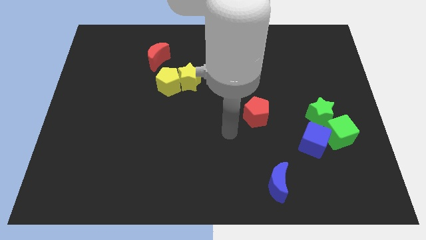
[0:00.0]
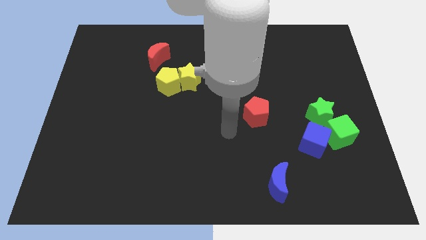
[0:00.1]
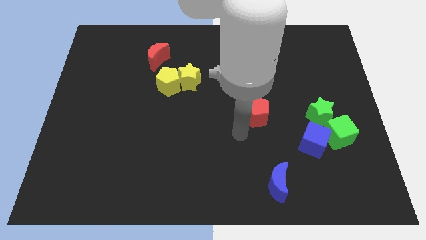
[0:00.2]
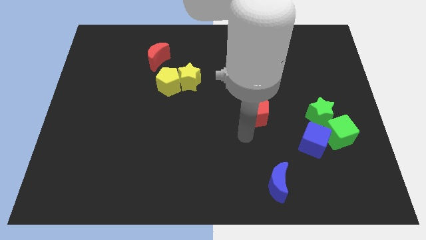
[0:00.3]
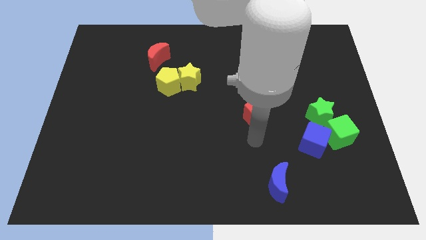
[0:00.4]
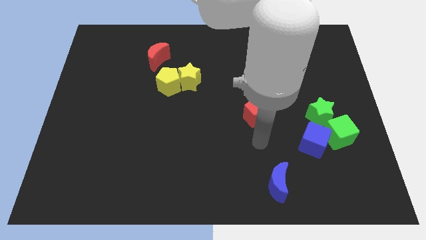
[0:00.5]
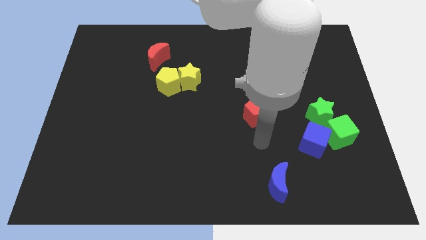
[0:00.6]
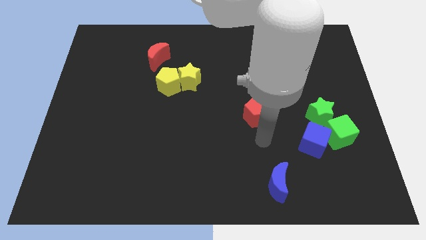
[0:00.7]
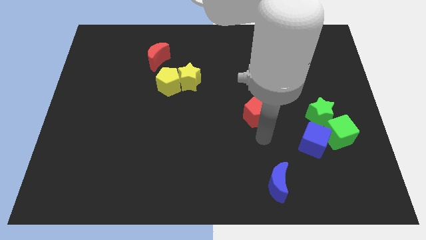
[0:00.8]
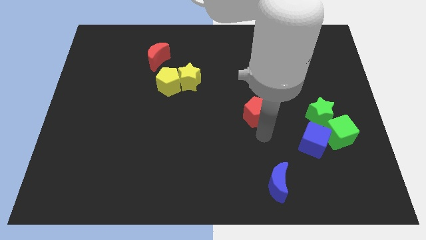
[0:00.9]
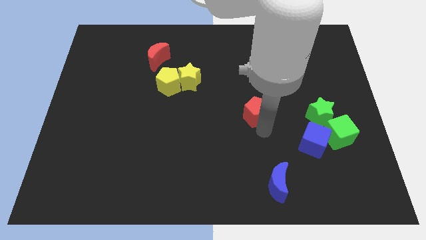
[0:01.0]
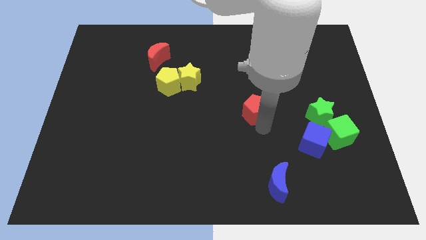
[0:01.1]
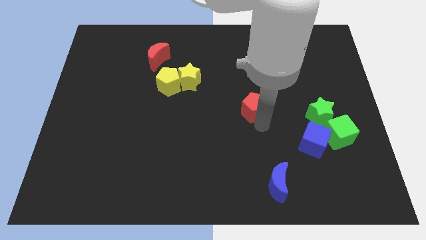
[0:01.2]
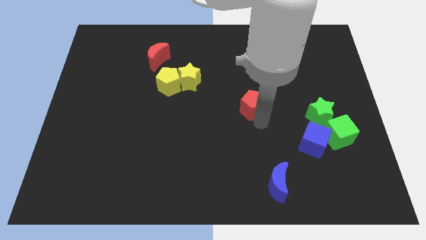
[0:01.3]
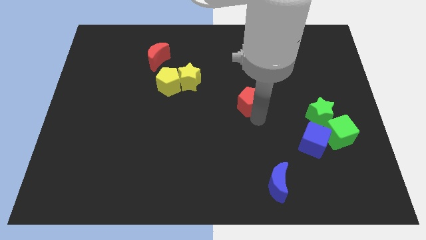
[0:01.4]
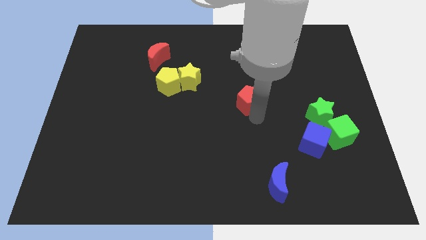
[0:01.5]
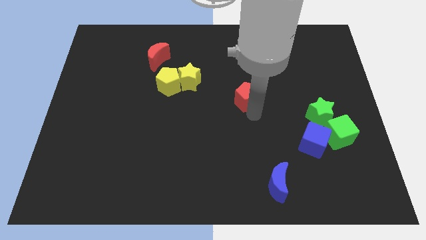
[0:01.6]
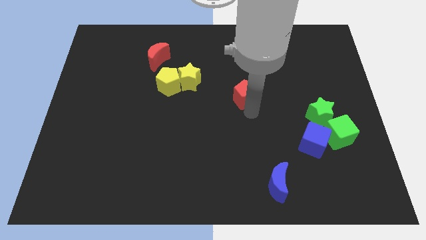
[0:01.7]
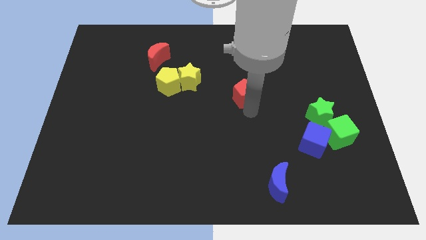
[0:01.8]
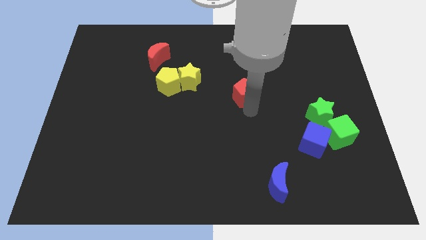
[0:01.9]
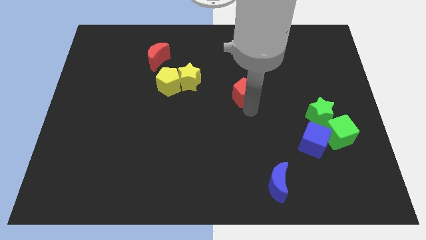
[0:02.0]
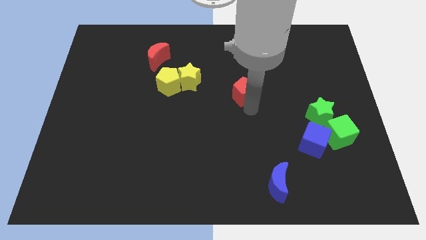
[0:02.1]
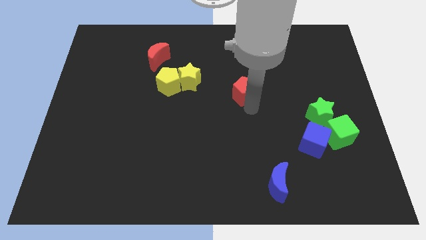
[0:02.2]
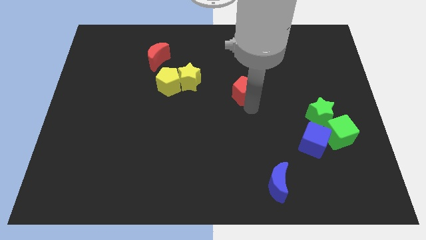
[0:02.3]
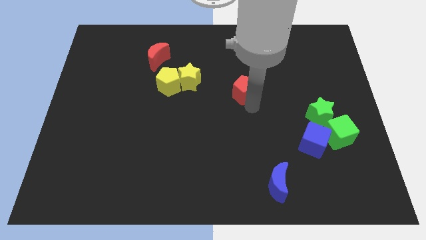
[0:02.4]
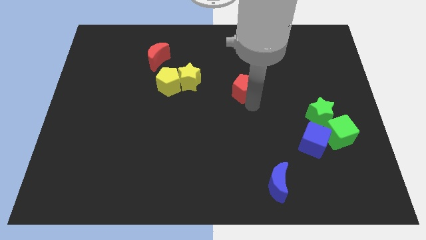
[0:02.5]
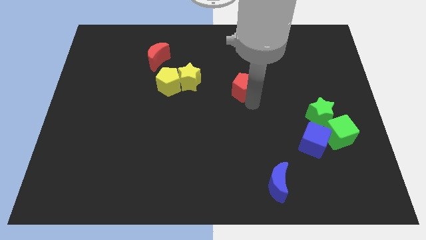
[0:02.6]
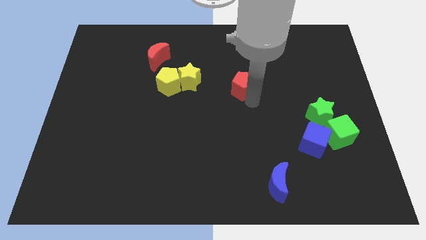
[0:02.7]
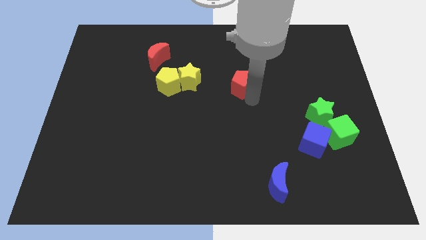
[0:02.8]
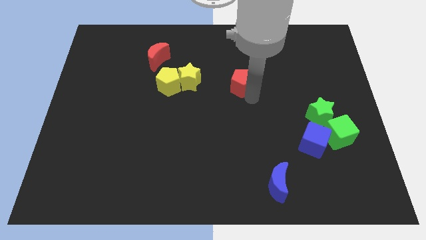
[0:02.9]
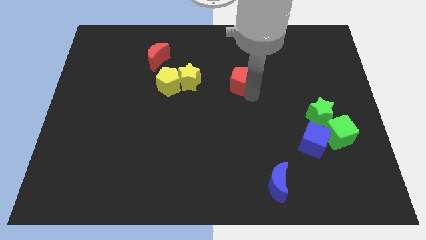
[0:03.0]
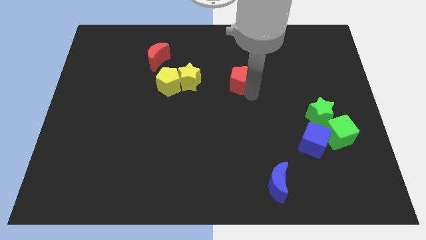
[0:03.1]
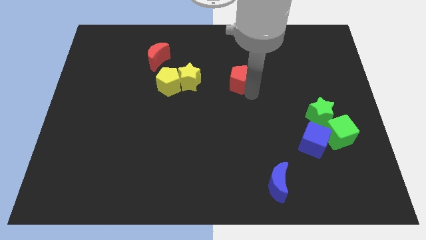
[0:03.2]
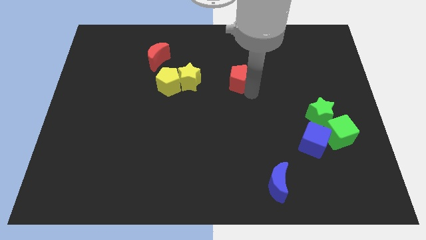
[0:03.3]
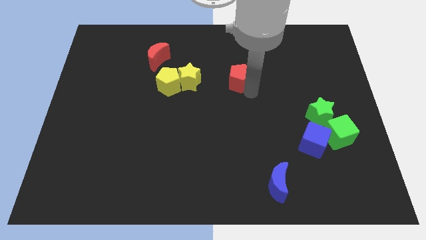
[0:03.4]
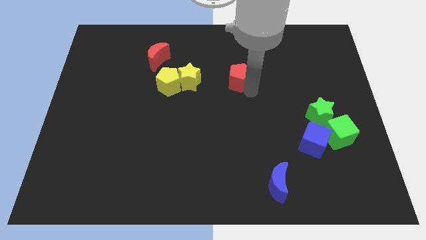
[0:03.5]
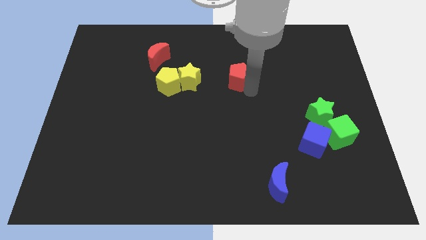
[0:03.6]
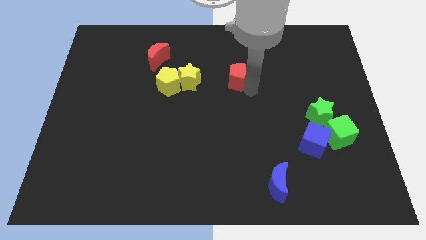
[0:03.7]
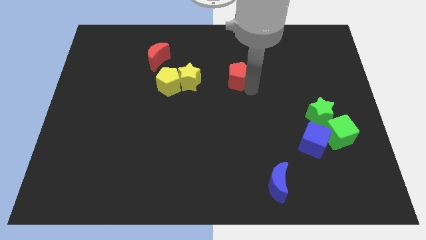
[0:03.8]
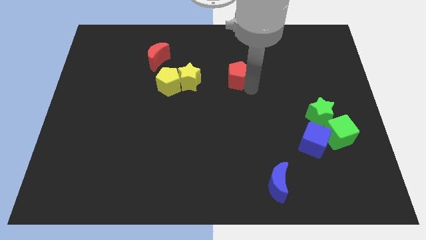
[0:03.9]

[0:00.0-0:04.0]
move the red pentagon to the right of the yellow star

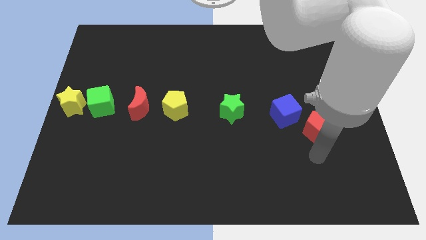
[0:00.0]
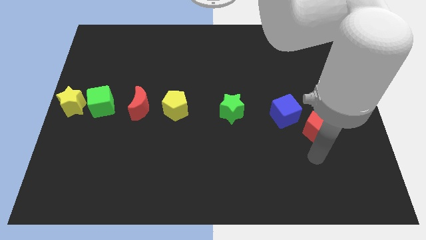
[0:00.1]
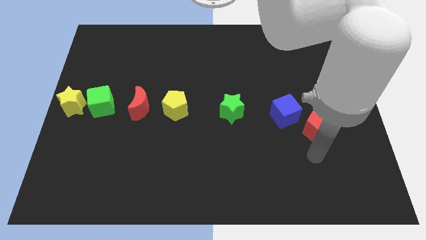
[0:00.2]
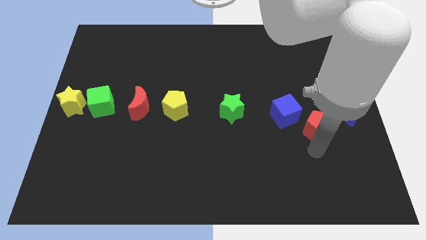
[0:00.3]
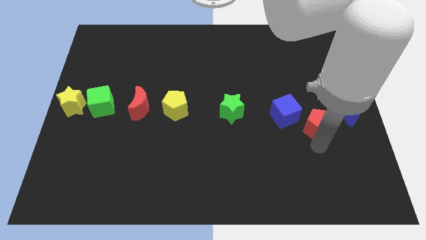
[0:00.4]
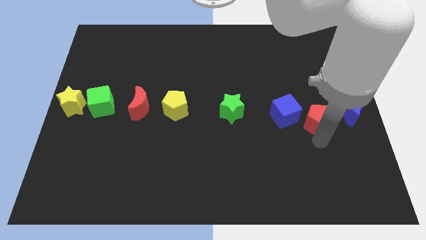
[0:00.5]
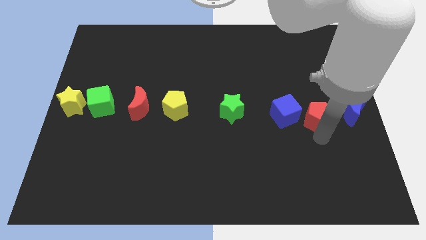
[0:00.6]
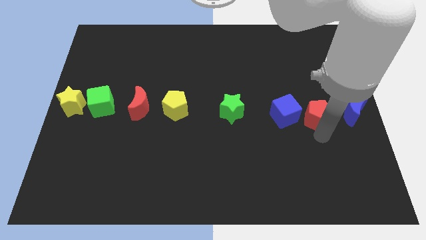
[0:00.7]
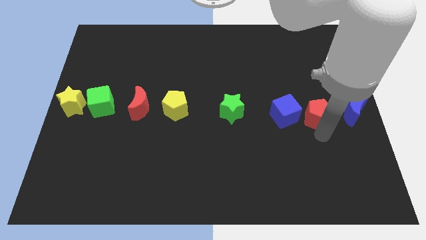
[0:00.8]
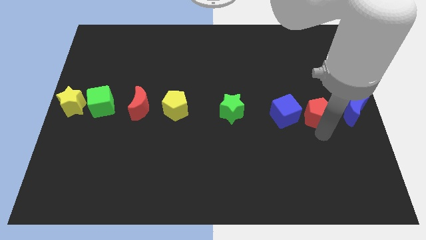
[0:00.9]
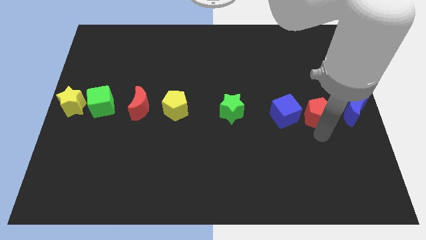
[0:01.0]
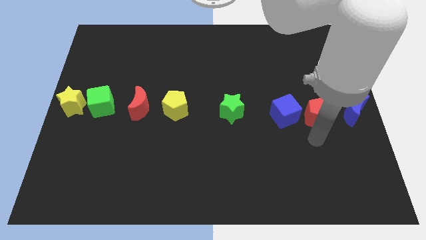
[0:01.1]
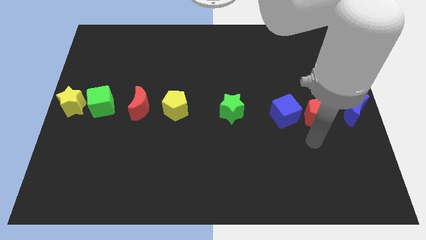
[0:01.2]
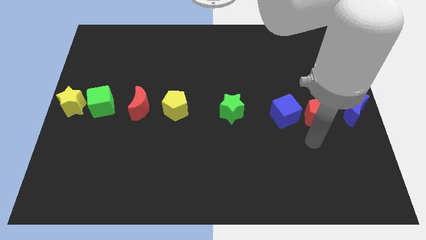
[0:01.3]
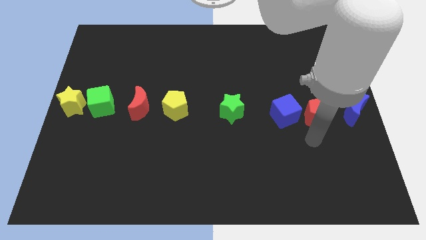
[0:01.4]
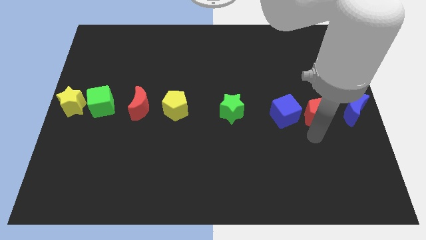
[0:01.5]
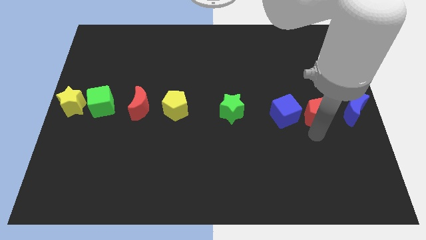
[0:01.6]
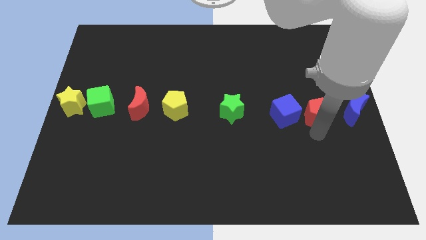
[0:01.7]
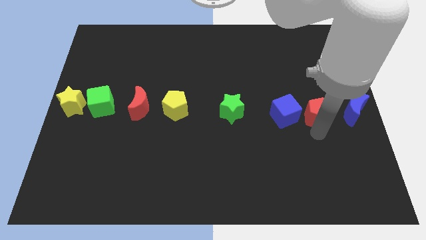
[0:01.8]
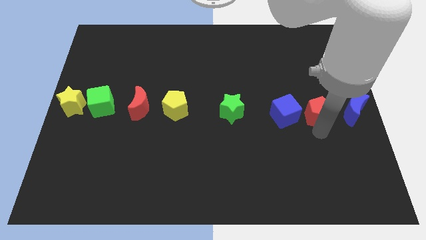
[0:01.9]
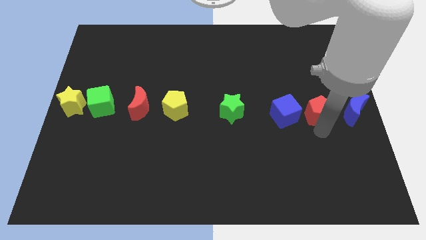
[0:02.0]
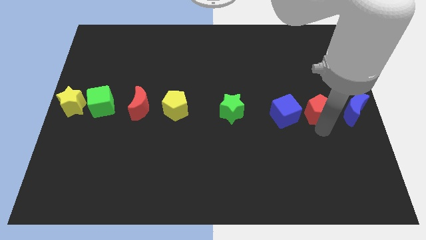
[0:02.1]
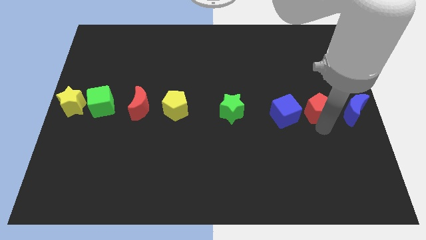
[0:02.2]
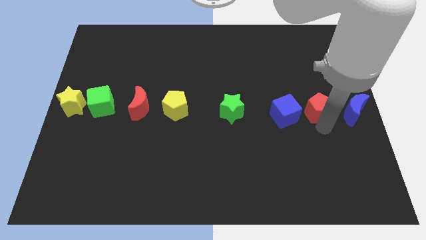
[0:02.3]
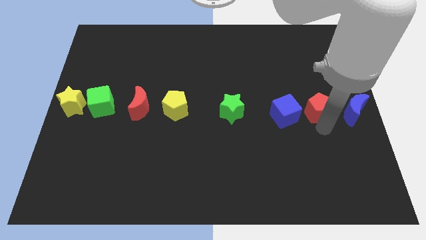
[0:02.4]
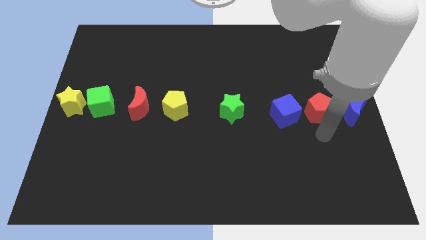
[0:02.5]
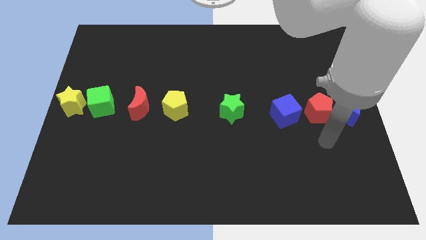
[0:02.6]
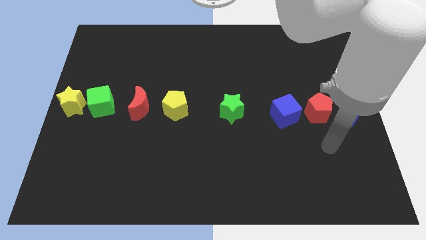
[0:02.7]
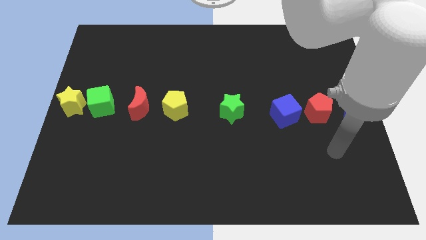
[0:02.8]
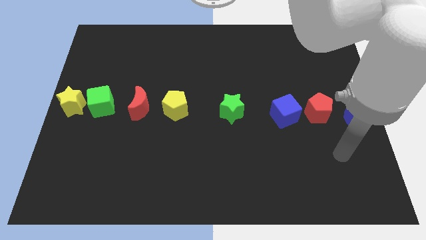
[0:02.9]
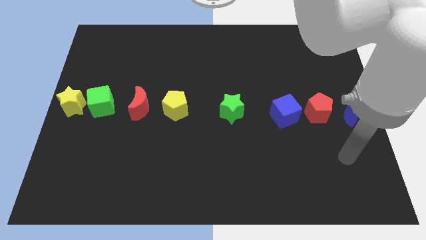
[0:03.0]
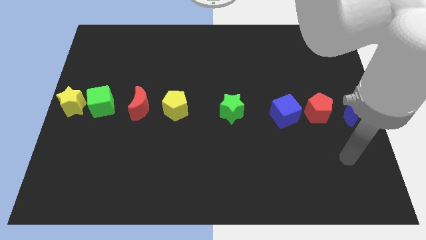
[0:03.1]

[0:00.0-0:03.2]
push the red pentagon to the right side of the blue cube

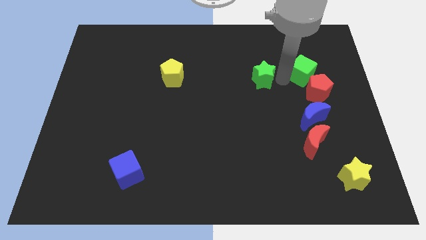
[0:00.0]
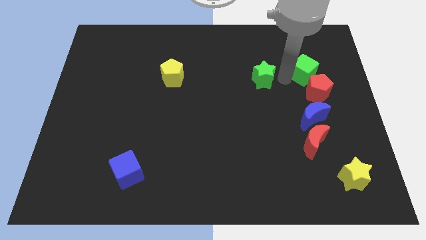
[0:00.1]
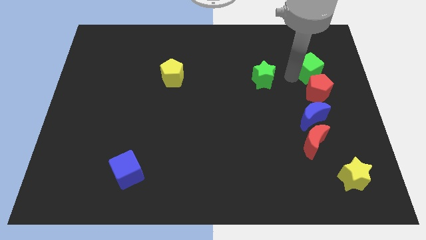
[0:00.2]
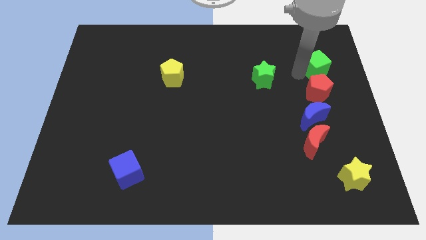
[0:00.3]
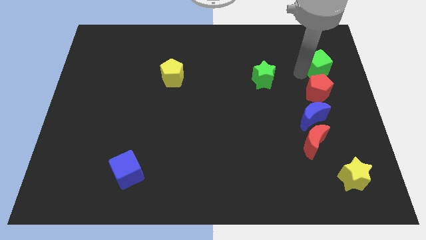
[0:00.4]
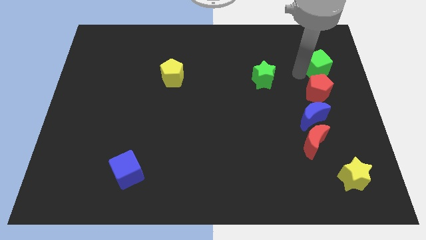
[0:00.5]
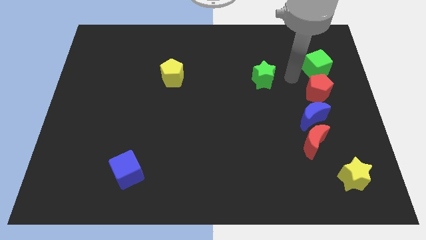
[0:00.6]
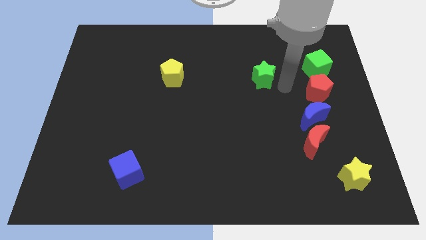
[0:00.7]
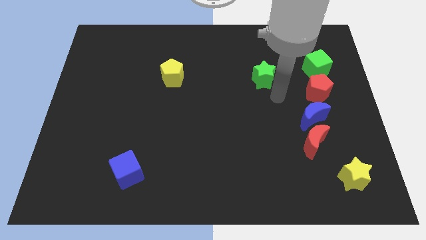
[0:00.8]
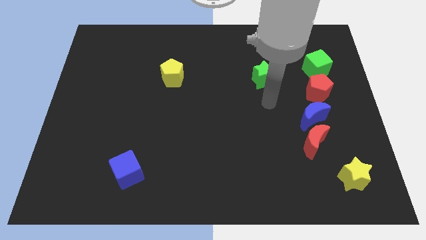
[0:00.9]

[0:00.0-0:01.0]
move the green cube above the red pentagon

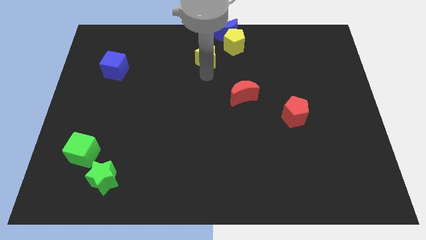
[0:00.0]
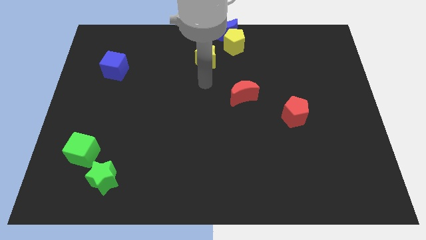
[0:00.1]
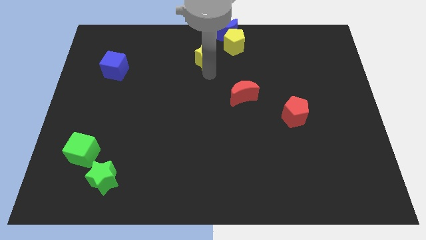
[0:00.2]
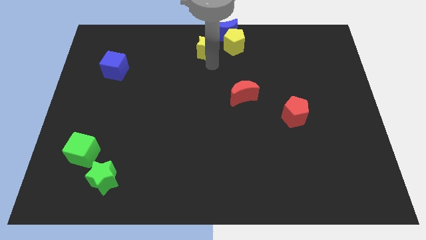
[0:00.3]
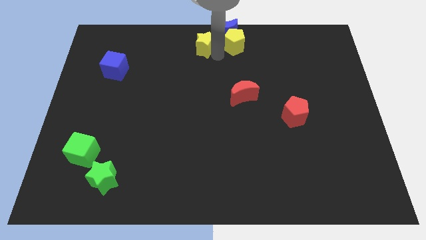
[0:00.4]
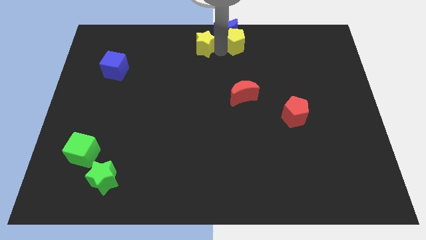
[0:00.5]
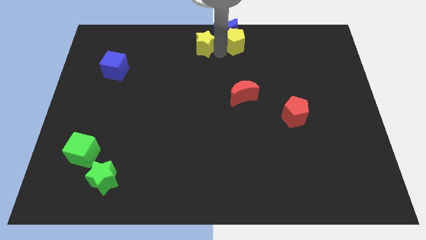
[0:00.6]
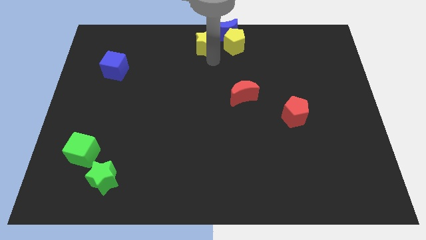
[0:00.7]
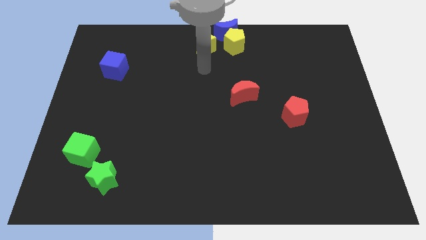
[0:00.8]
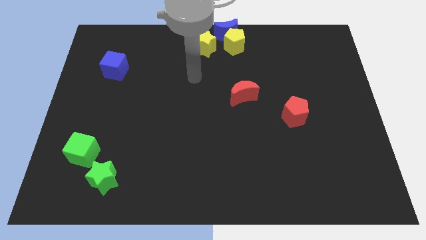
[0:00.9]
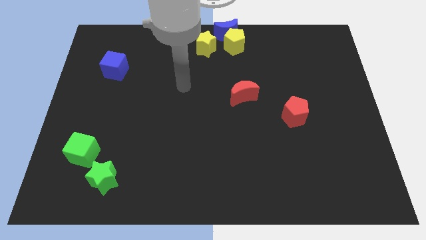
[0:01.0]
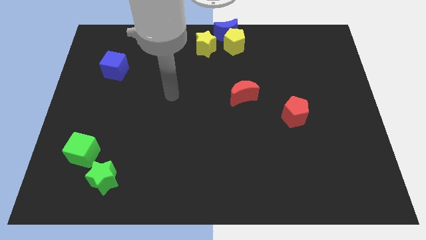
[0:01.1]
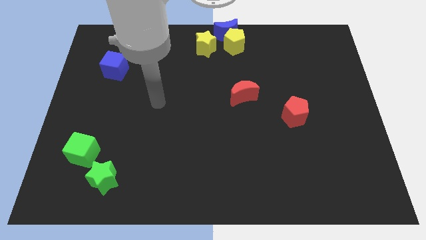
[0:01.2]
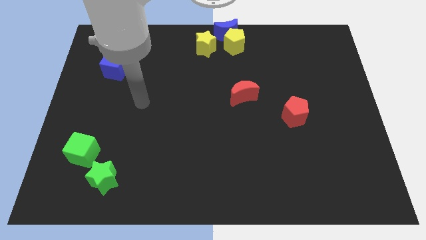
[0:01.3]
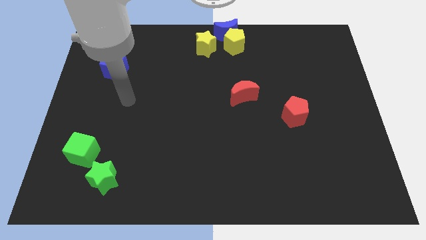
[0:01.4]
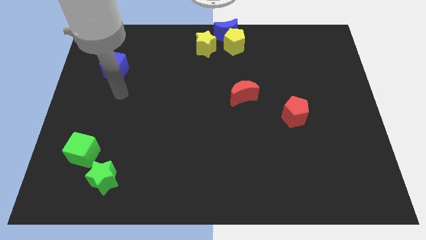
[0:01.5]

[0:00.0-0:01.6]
move your arm away from the yellow star
